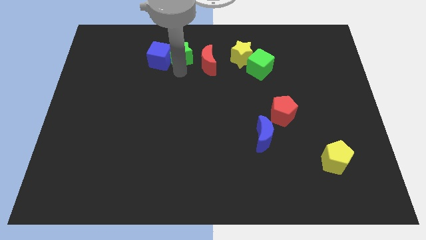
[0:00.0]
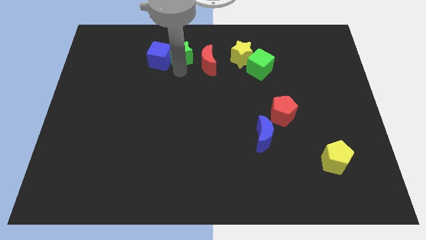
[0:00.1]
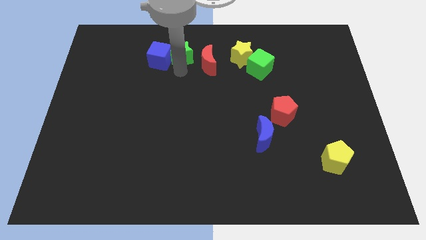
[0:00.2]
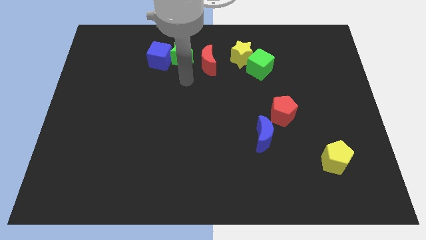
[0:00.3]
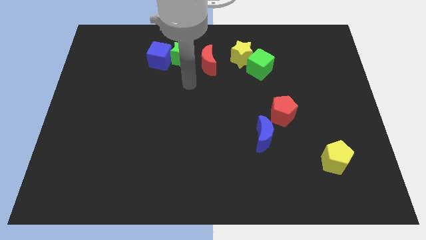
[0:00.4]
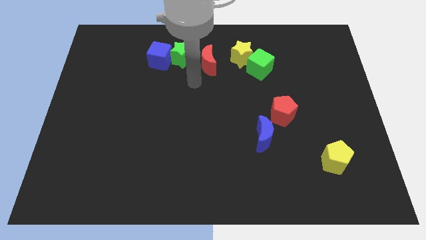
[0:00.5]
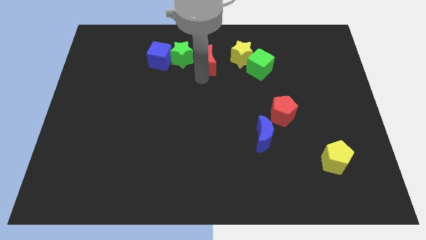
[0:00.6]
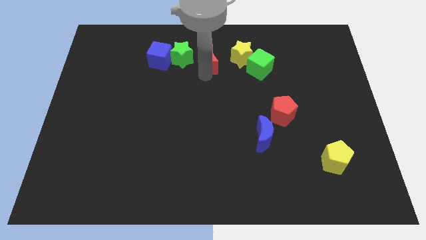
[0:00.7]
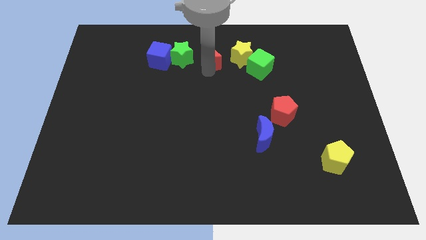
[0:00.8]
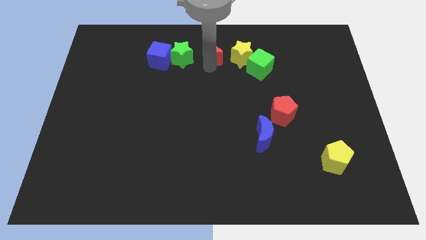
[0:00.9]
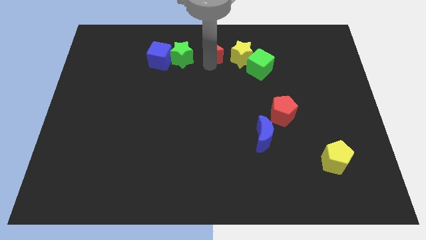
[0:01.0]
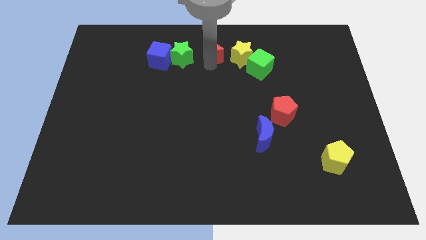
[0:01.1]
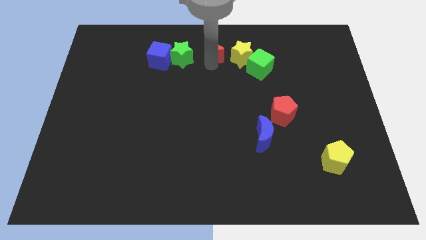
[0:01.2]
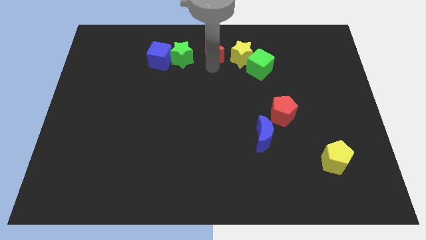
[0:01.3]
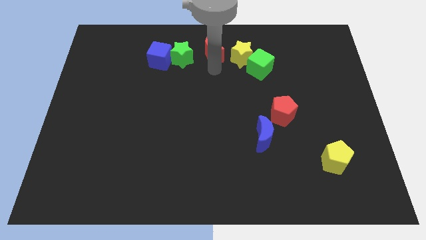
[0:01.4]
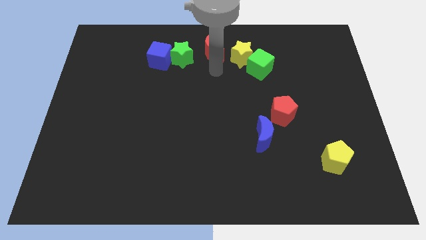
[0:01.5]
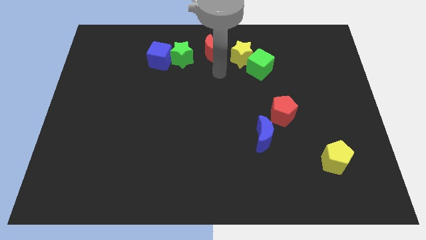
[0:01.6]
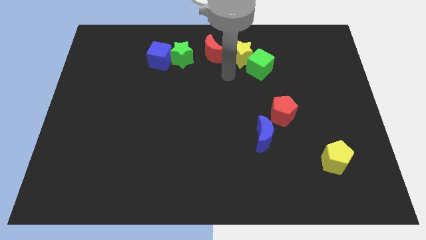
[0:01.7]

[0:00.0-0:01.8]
push the red moon to the left of the yellow star

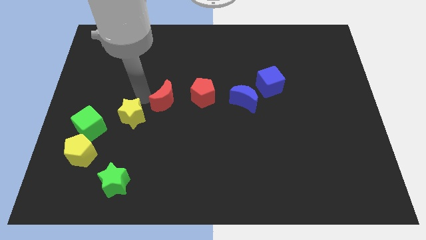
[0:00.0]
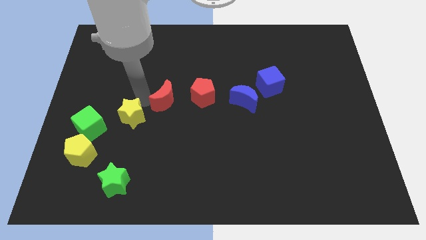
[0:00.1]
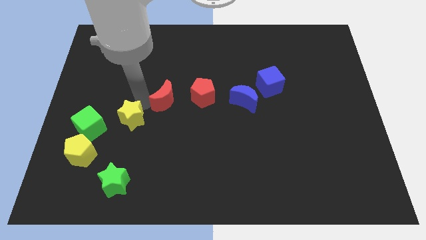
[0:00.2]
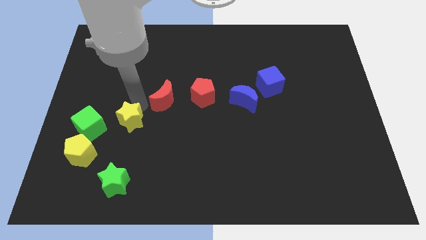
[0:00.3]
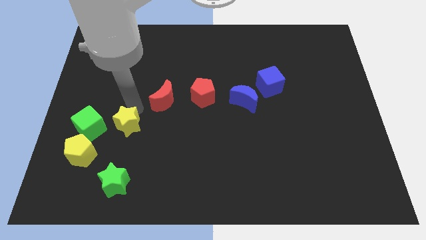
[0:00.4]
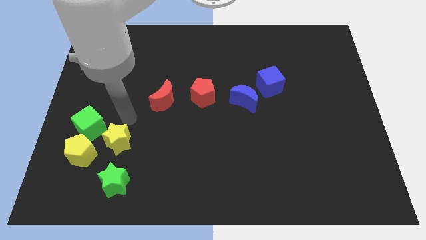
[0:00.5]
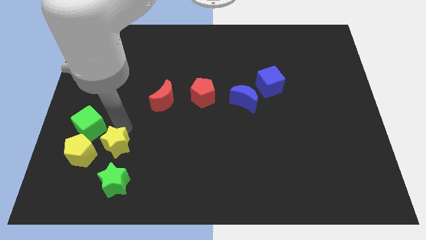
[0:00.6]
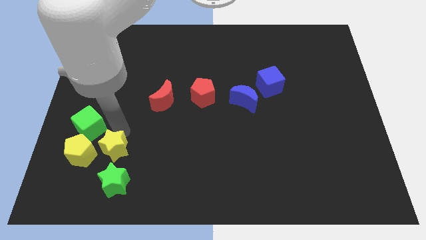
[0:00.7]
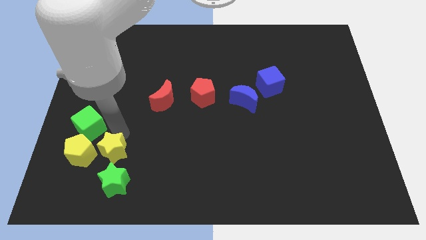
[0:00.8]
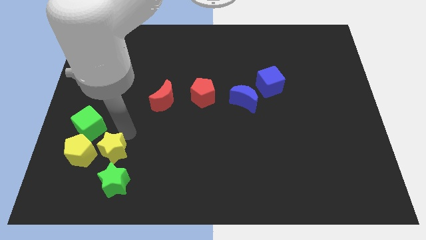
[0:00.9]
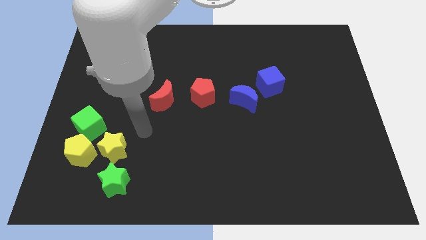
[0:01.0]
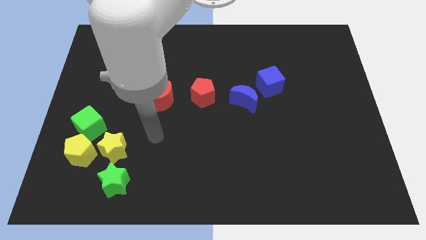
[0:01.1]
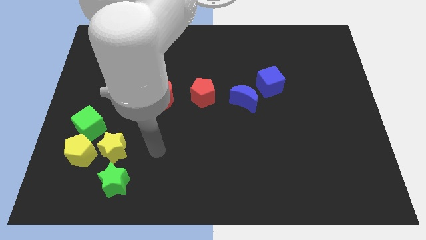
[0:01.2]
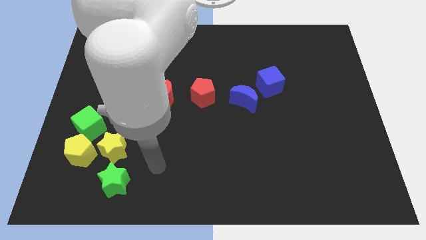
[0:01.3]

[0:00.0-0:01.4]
move the yellow star below the green cube

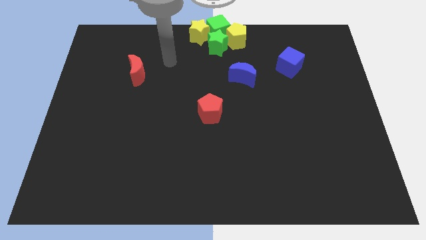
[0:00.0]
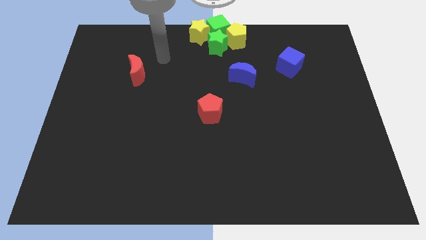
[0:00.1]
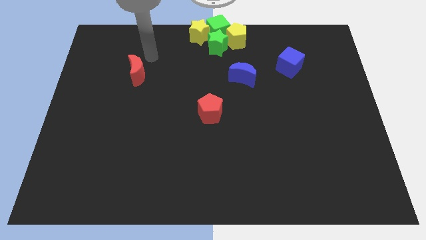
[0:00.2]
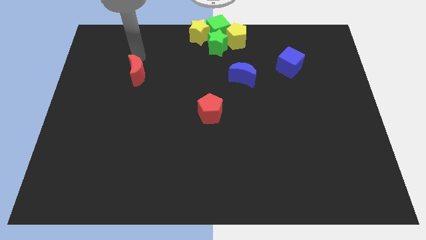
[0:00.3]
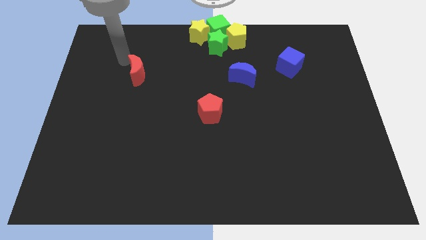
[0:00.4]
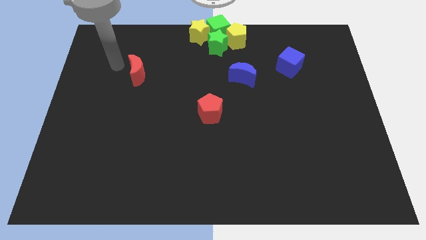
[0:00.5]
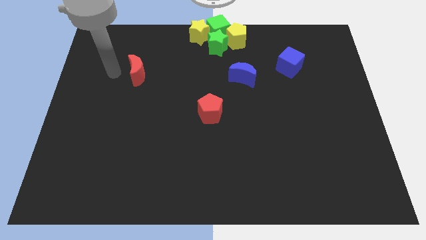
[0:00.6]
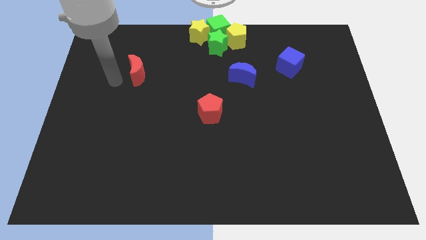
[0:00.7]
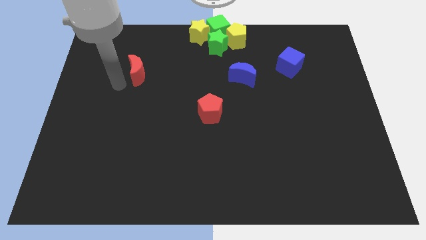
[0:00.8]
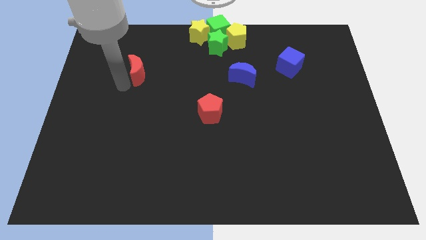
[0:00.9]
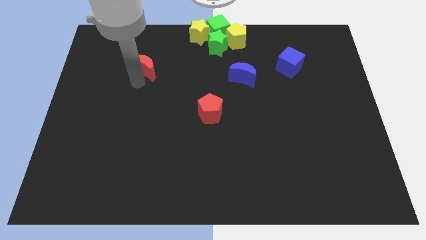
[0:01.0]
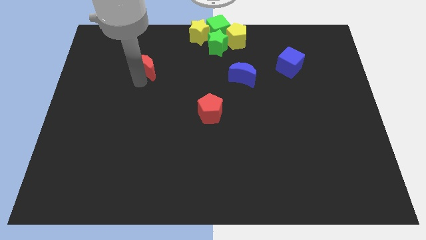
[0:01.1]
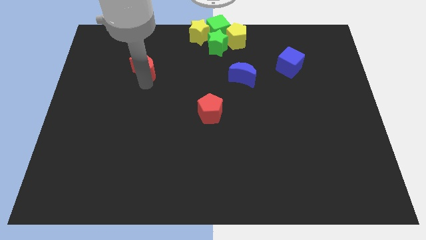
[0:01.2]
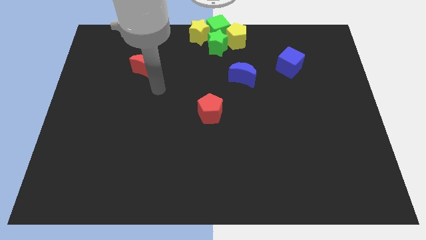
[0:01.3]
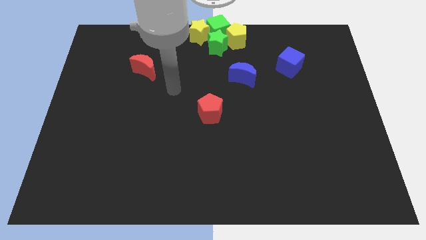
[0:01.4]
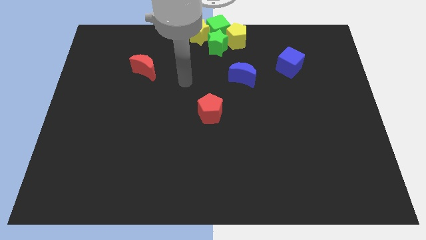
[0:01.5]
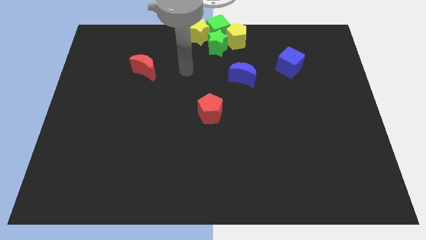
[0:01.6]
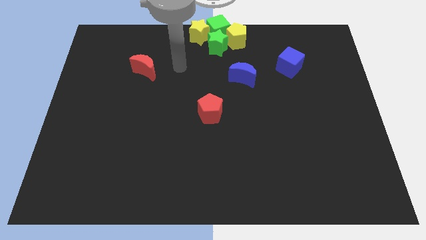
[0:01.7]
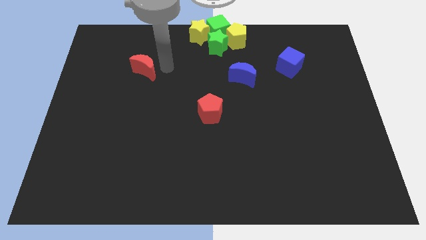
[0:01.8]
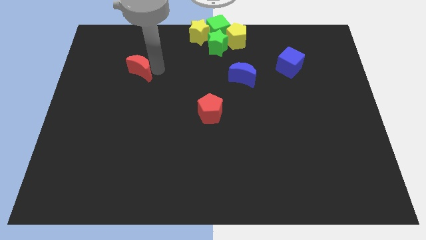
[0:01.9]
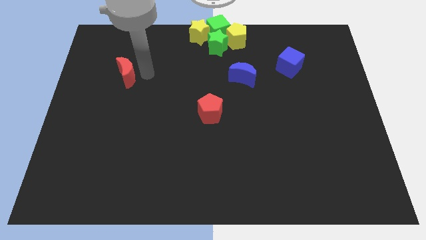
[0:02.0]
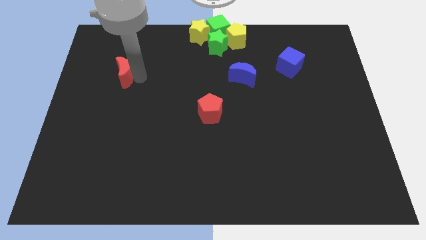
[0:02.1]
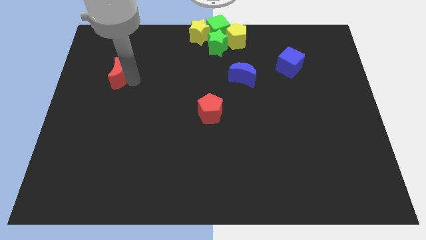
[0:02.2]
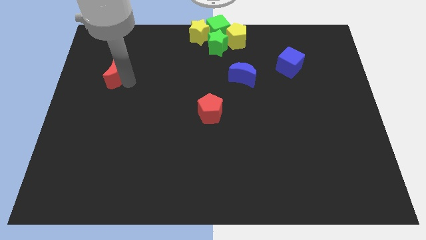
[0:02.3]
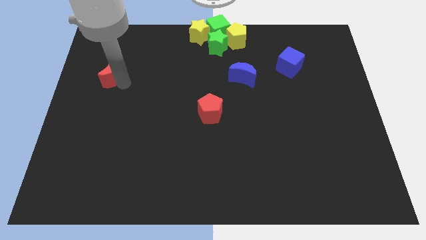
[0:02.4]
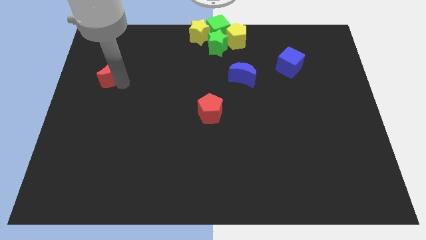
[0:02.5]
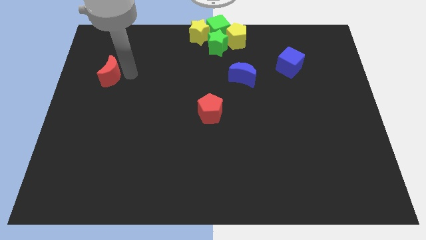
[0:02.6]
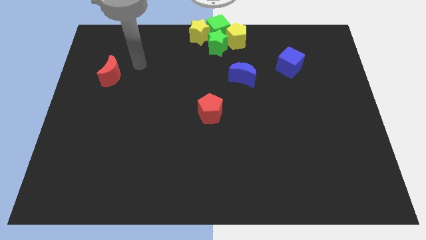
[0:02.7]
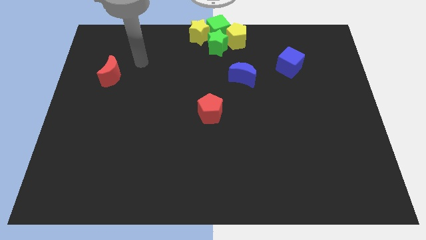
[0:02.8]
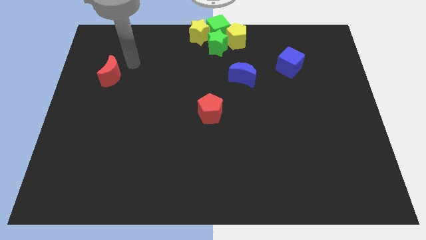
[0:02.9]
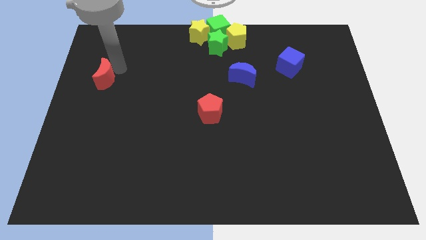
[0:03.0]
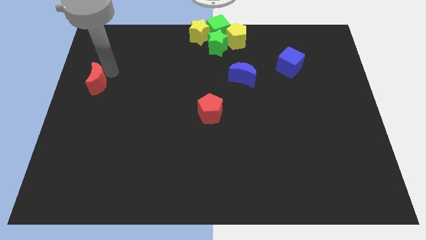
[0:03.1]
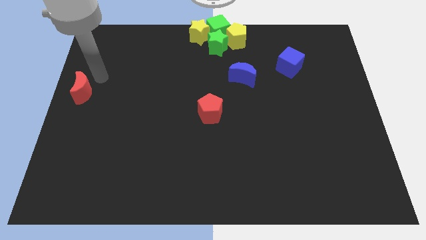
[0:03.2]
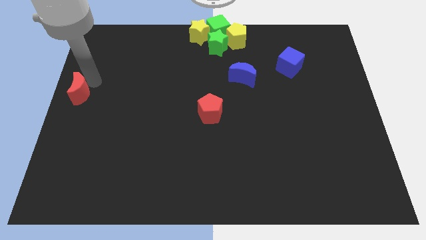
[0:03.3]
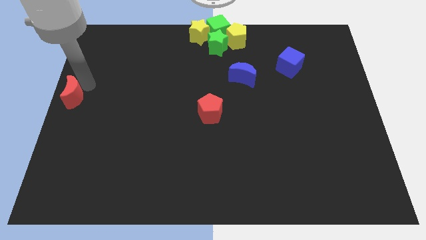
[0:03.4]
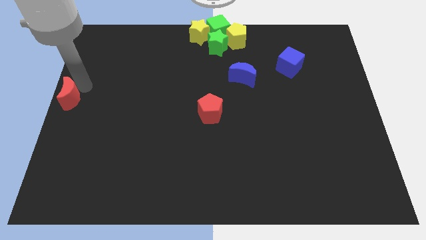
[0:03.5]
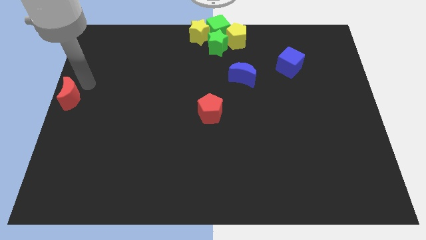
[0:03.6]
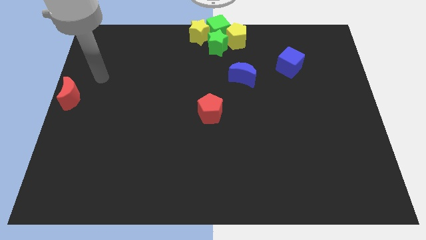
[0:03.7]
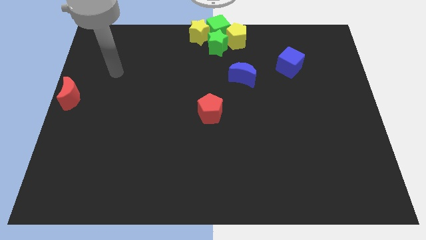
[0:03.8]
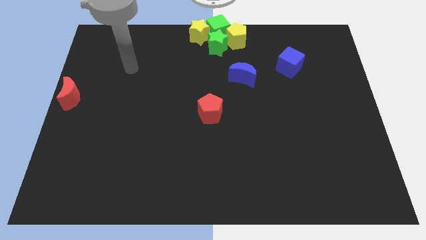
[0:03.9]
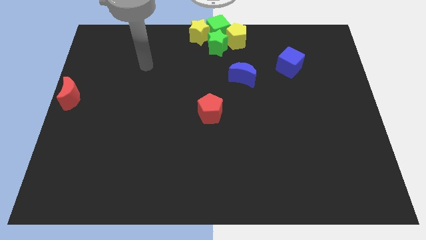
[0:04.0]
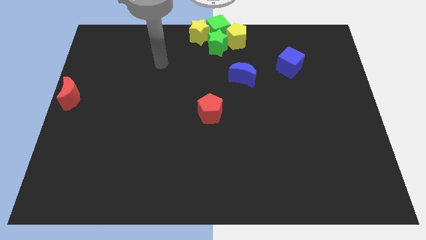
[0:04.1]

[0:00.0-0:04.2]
move the red moon to the center left

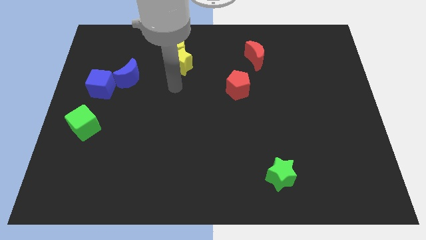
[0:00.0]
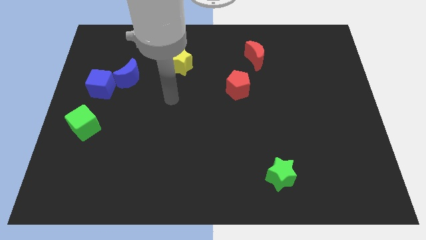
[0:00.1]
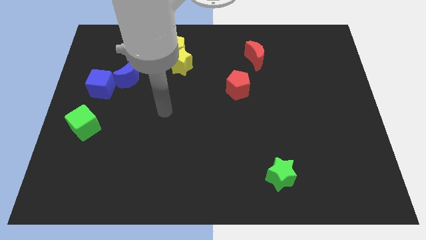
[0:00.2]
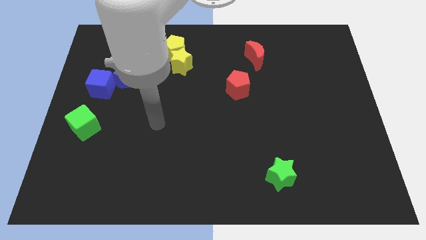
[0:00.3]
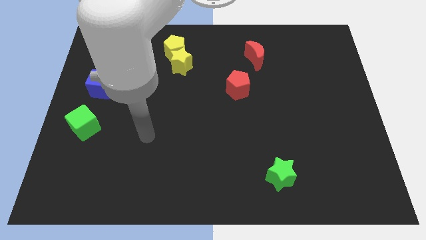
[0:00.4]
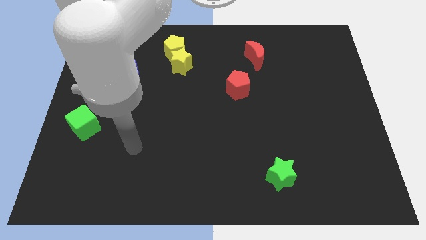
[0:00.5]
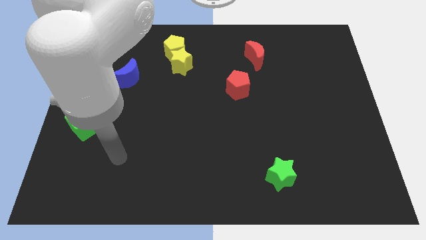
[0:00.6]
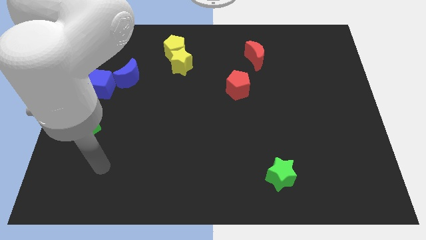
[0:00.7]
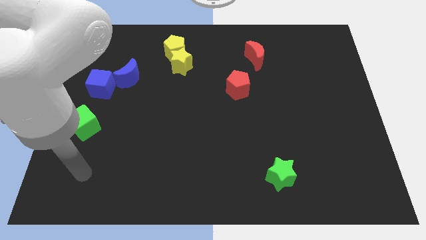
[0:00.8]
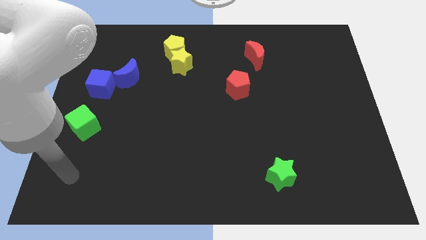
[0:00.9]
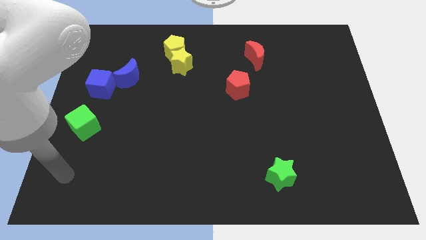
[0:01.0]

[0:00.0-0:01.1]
move your hand to the bottom of the green cube

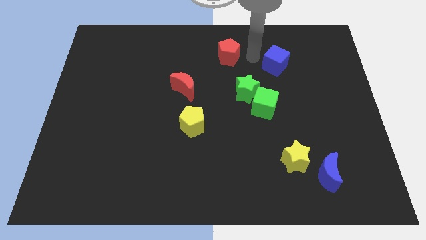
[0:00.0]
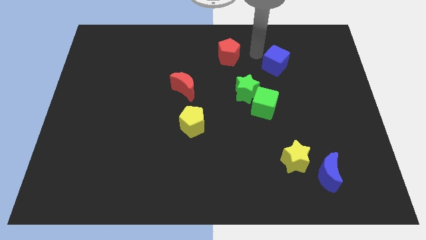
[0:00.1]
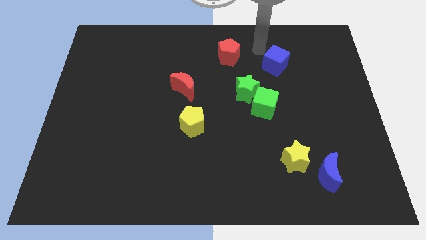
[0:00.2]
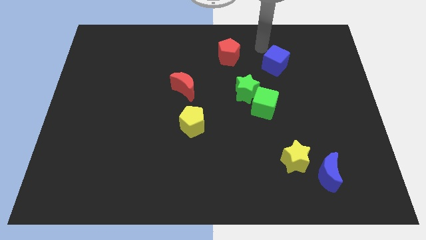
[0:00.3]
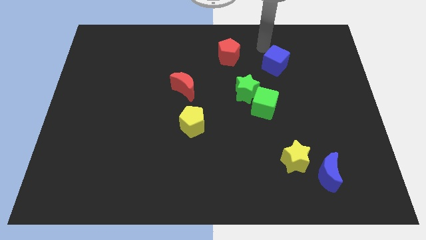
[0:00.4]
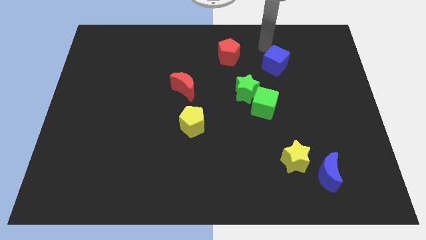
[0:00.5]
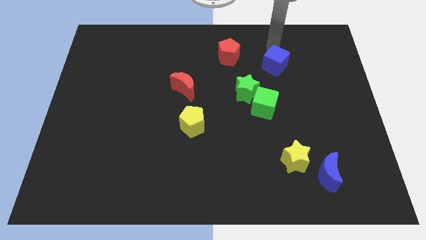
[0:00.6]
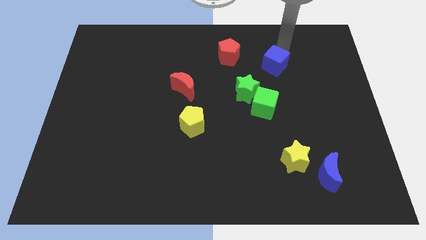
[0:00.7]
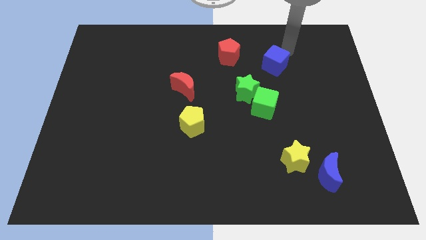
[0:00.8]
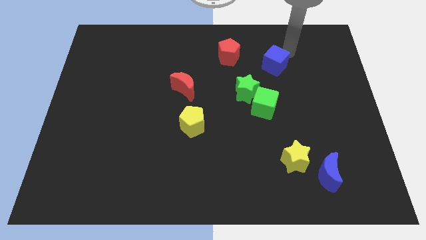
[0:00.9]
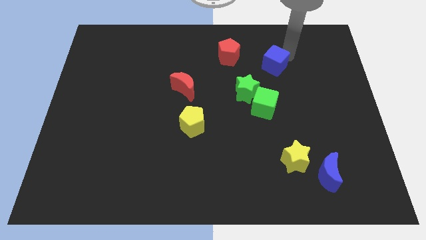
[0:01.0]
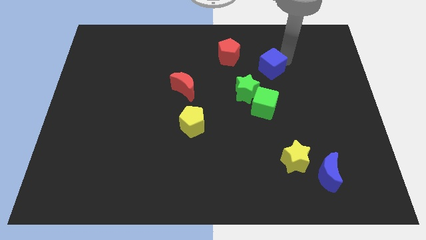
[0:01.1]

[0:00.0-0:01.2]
place your arm to the top side of the blue cube
